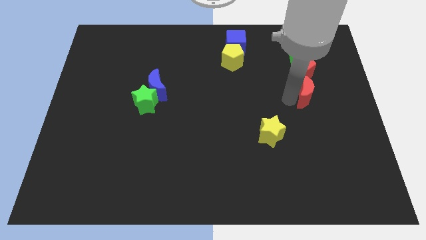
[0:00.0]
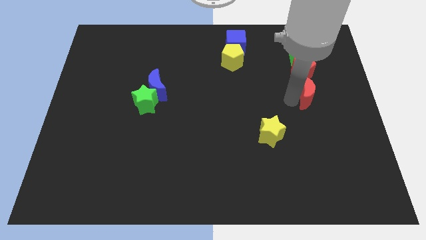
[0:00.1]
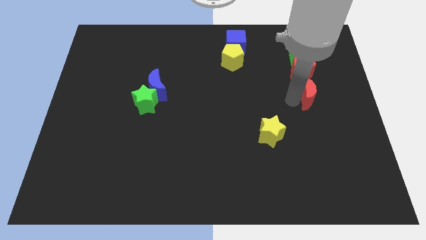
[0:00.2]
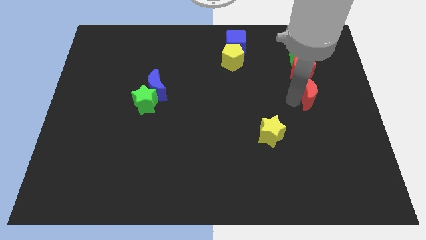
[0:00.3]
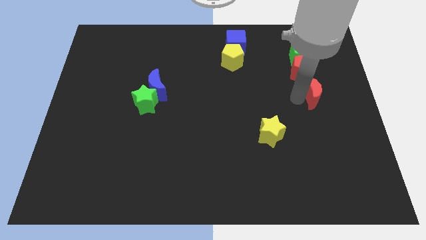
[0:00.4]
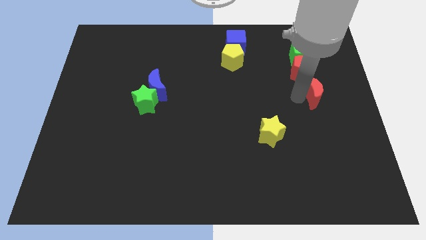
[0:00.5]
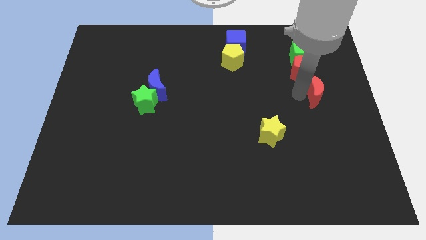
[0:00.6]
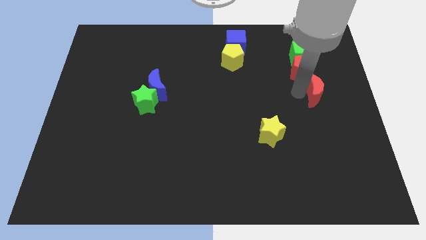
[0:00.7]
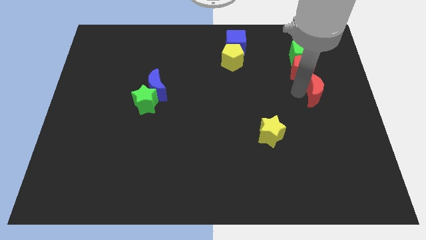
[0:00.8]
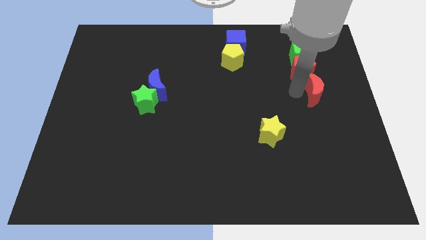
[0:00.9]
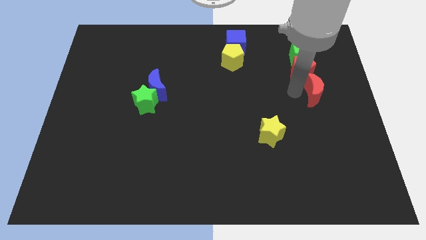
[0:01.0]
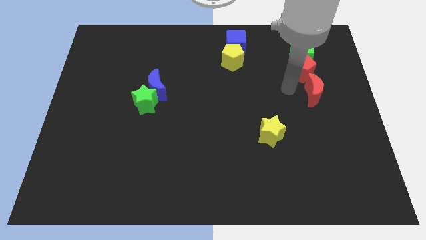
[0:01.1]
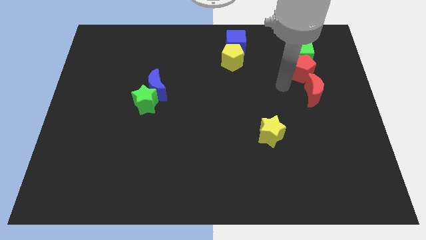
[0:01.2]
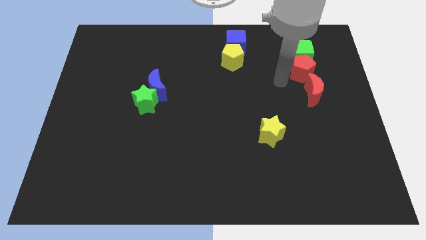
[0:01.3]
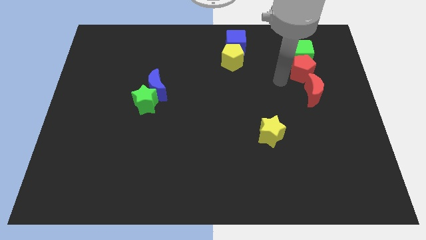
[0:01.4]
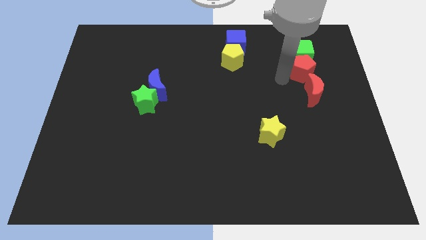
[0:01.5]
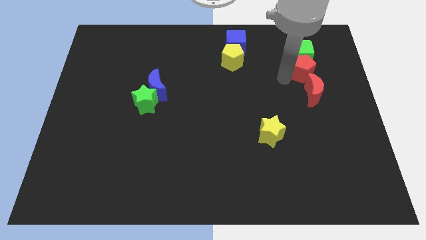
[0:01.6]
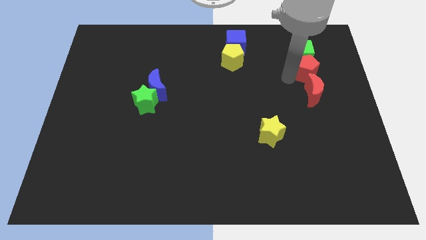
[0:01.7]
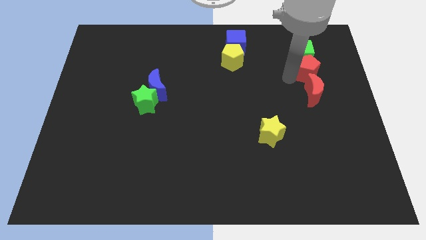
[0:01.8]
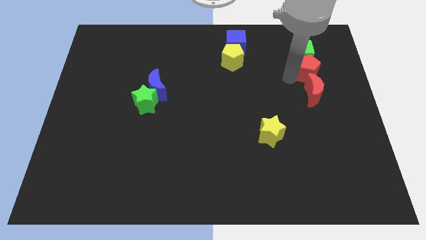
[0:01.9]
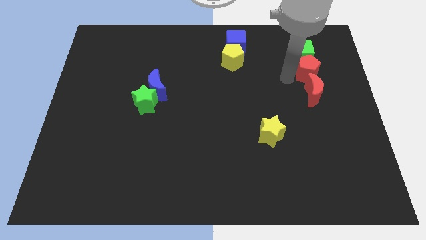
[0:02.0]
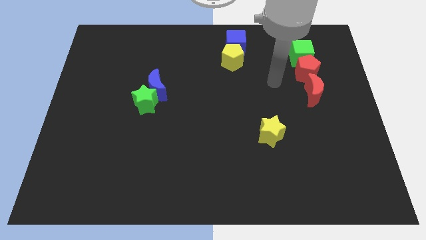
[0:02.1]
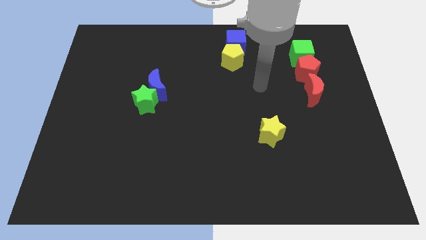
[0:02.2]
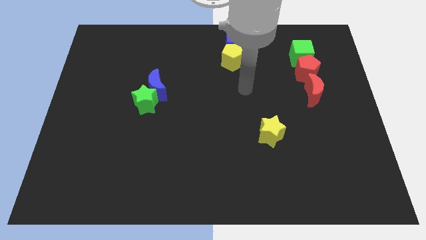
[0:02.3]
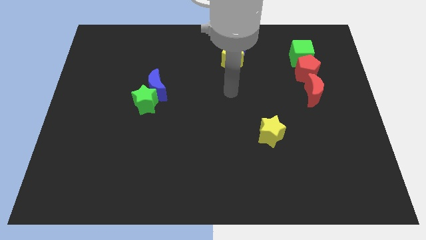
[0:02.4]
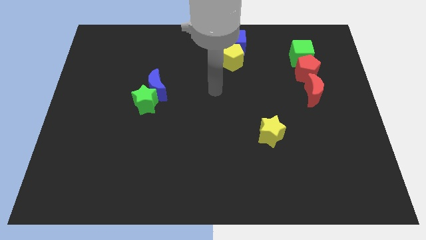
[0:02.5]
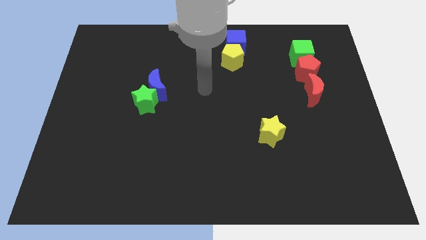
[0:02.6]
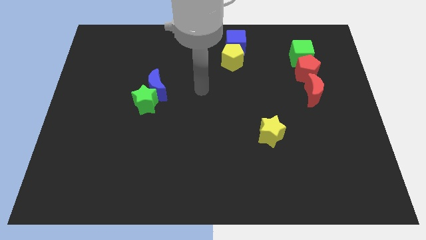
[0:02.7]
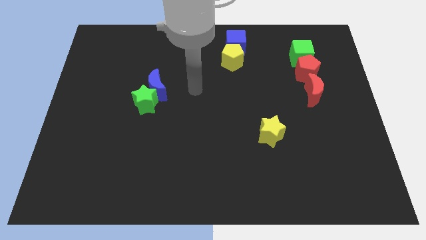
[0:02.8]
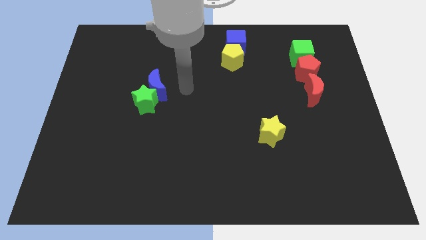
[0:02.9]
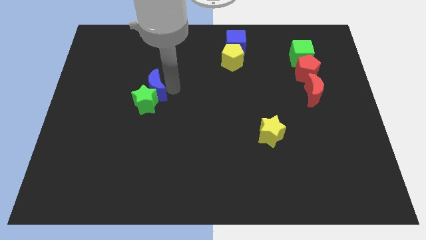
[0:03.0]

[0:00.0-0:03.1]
slightly move the two red blocks to the right

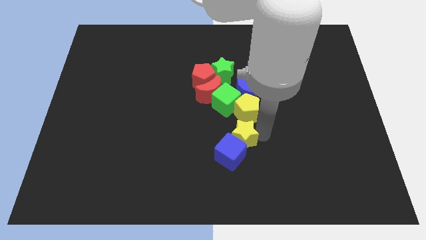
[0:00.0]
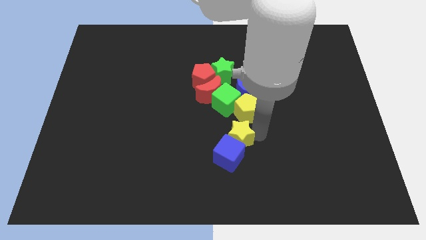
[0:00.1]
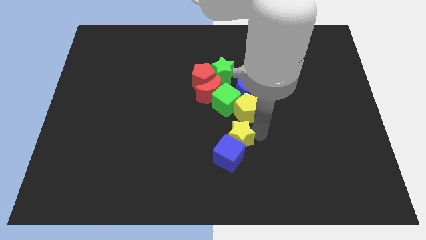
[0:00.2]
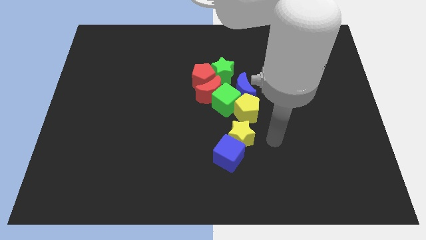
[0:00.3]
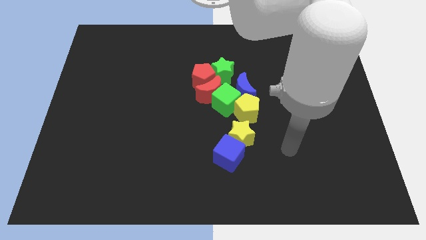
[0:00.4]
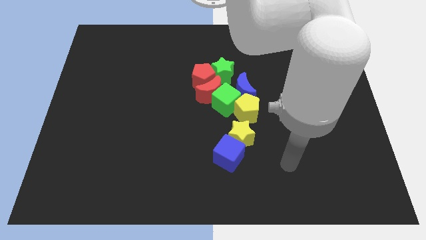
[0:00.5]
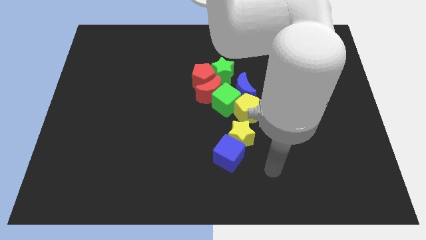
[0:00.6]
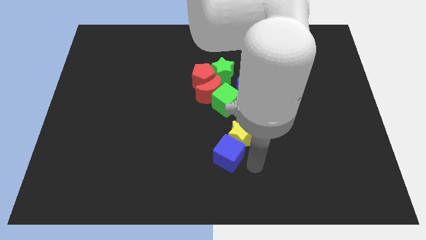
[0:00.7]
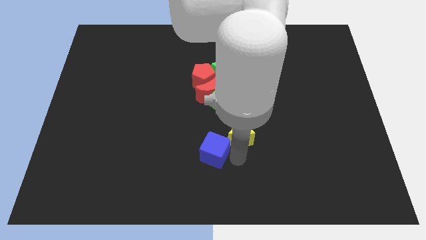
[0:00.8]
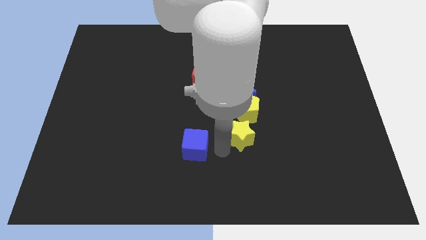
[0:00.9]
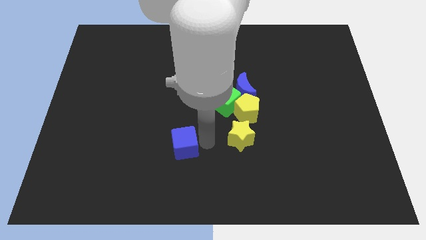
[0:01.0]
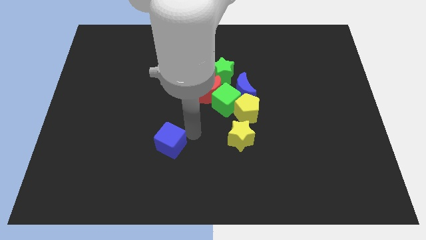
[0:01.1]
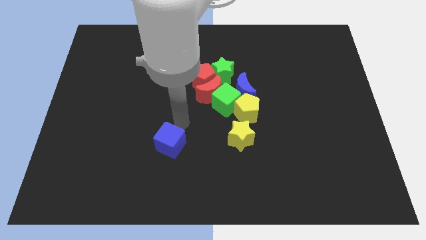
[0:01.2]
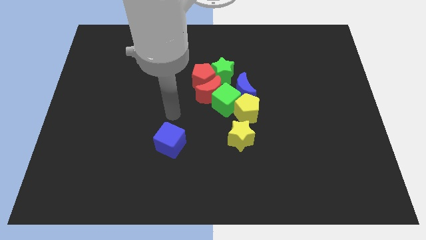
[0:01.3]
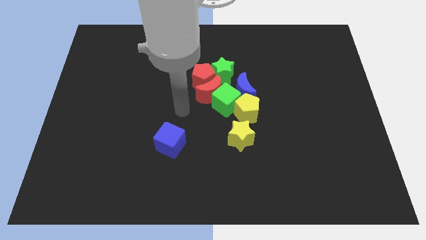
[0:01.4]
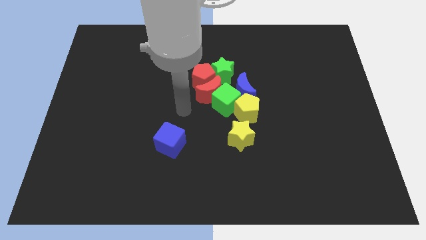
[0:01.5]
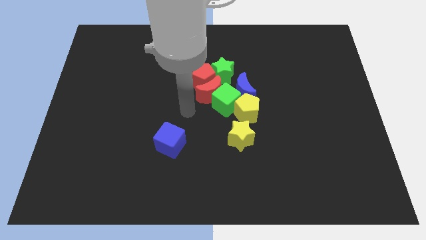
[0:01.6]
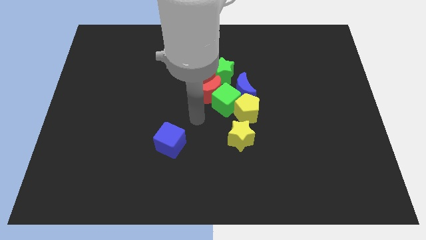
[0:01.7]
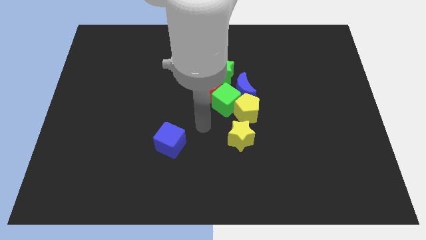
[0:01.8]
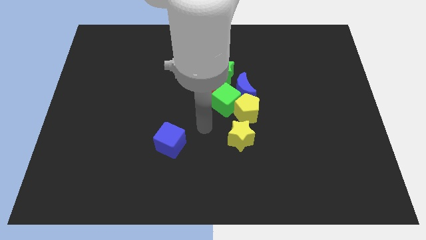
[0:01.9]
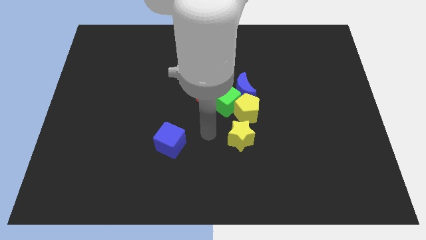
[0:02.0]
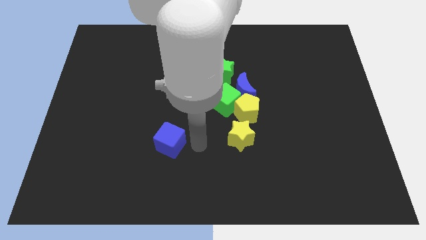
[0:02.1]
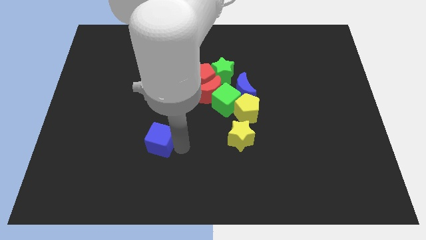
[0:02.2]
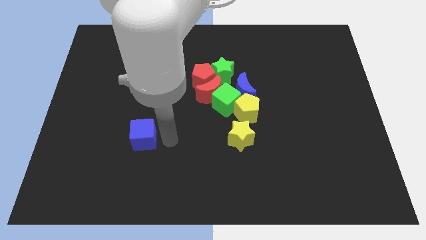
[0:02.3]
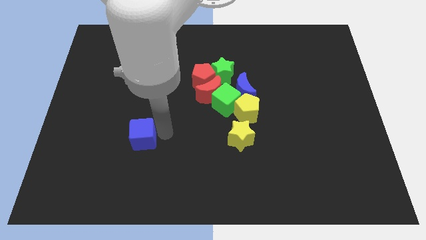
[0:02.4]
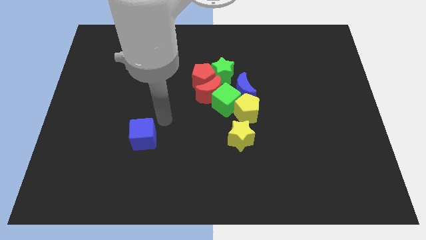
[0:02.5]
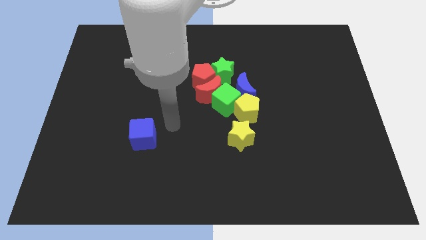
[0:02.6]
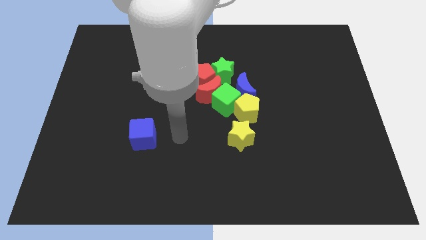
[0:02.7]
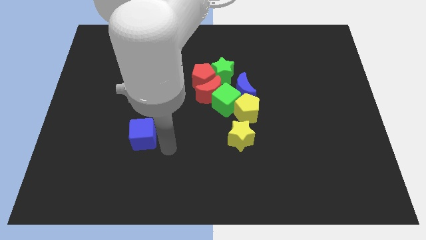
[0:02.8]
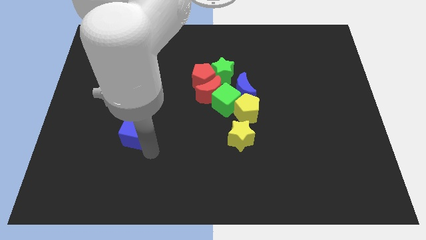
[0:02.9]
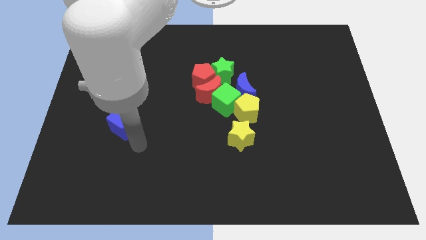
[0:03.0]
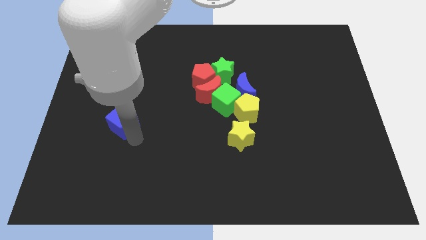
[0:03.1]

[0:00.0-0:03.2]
push the blue cube to the left side of the table

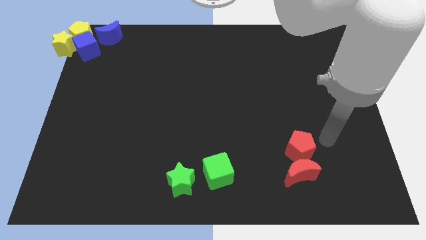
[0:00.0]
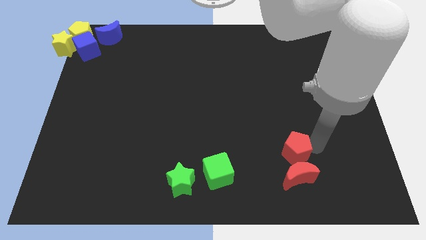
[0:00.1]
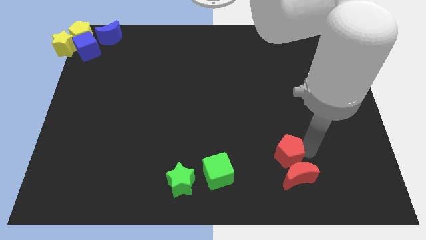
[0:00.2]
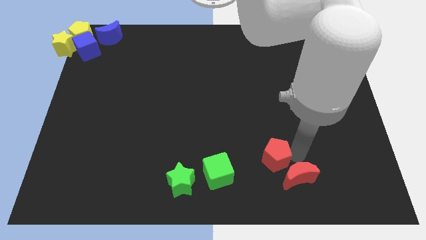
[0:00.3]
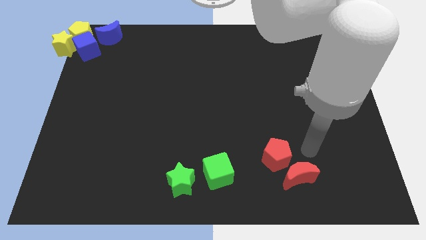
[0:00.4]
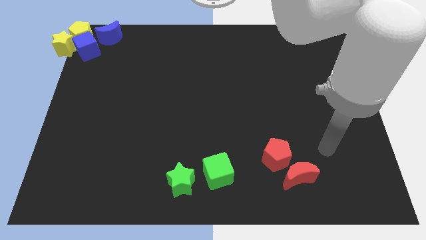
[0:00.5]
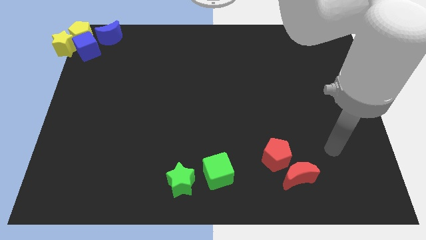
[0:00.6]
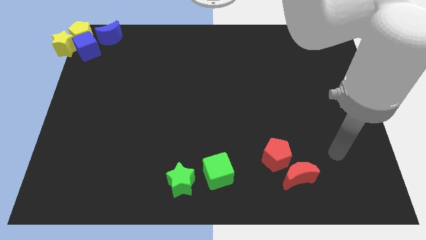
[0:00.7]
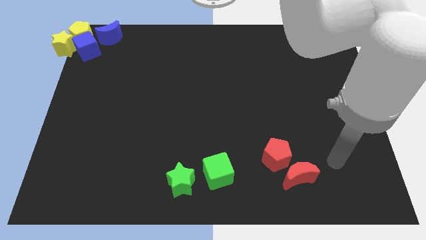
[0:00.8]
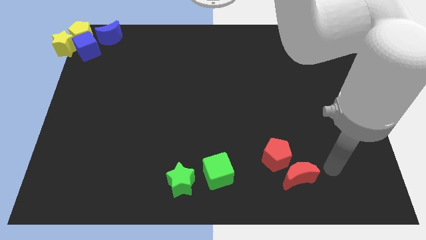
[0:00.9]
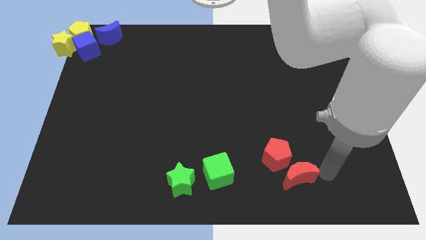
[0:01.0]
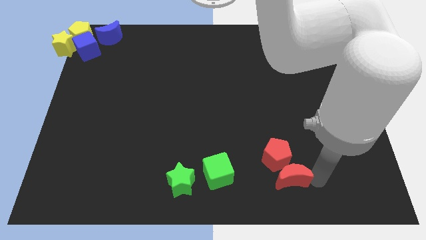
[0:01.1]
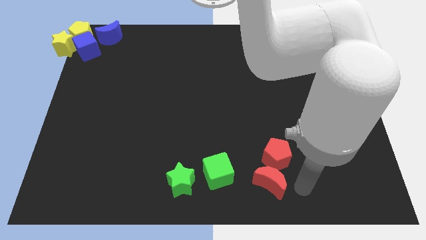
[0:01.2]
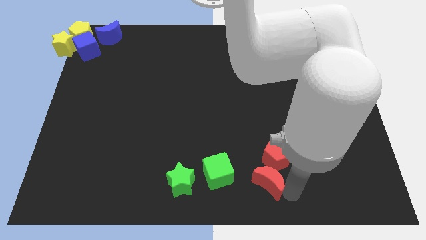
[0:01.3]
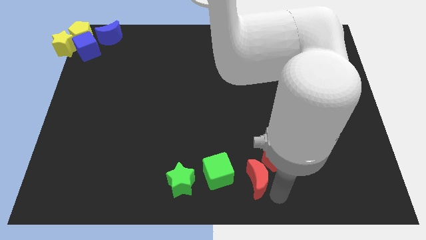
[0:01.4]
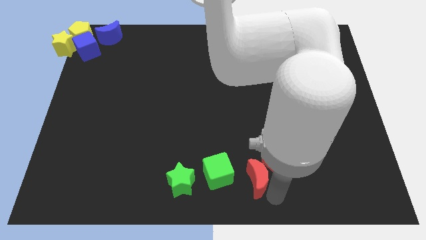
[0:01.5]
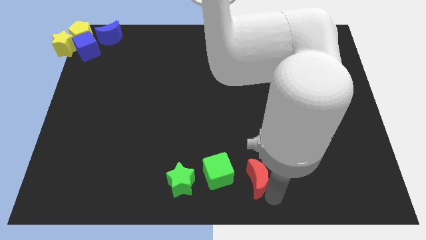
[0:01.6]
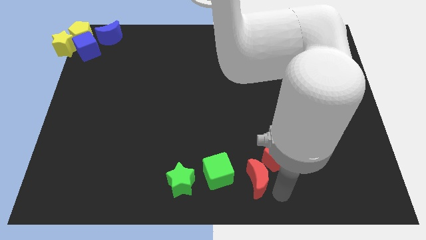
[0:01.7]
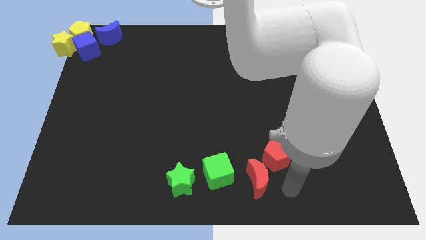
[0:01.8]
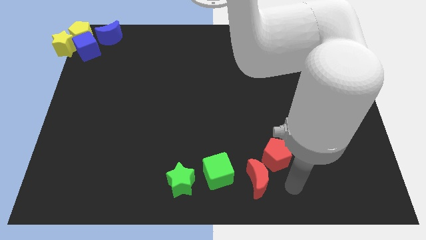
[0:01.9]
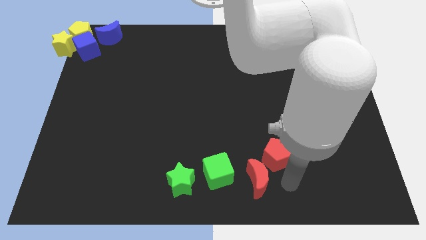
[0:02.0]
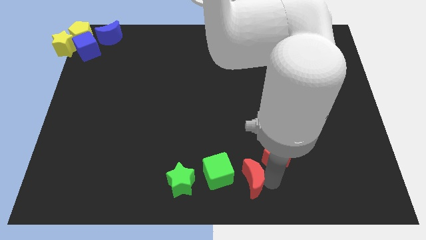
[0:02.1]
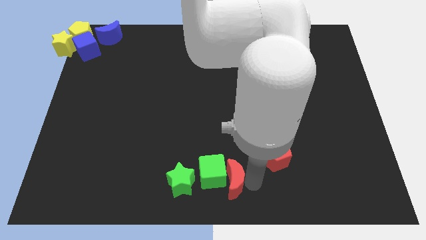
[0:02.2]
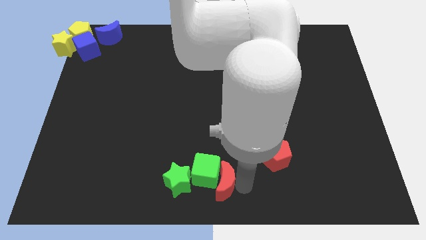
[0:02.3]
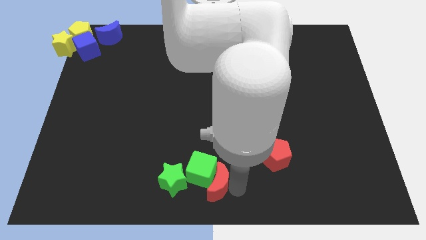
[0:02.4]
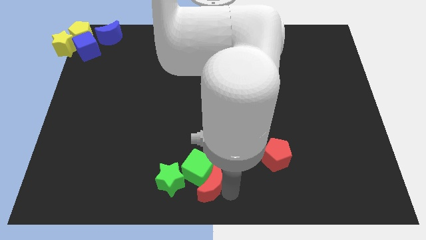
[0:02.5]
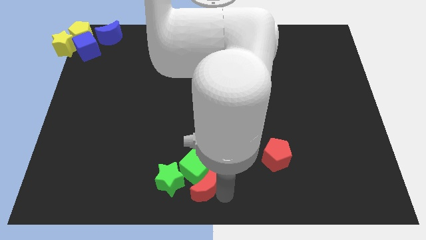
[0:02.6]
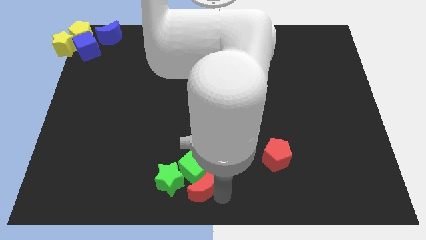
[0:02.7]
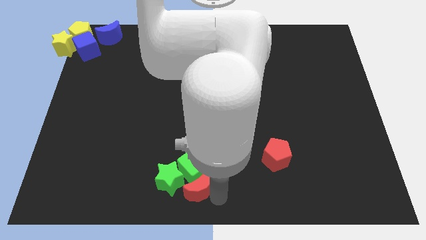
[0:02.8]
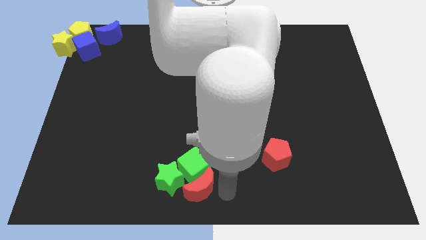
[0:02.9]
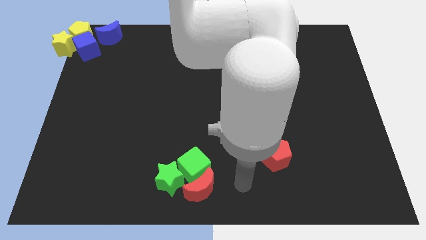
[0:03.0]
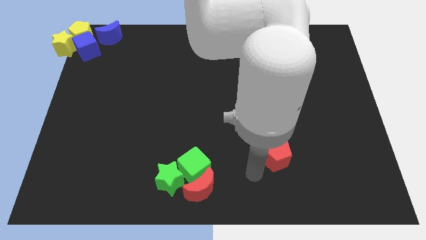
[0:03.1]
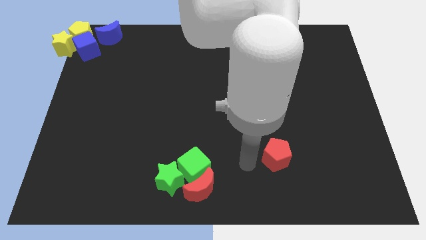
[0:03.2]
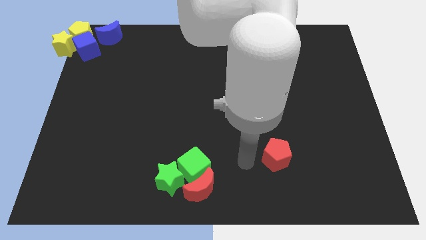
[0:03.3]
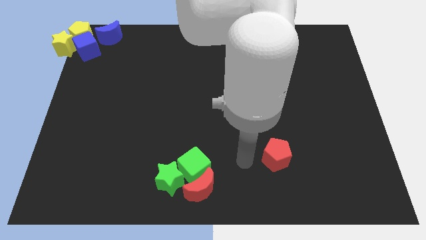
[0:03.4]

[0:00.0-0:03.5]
push red moon in to green blocks
